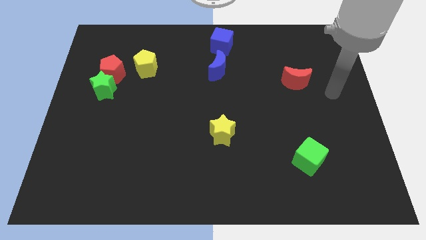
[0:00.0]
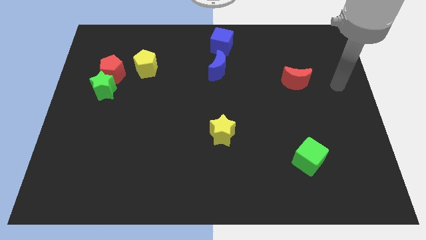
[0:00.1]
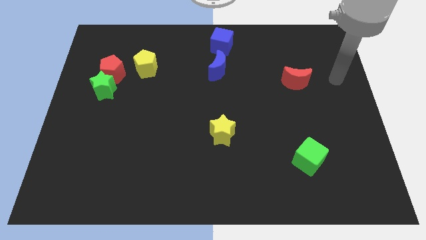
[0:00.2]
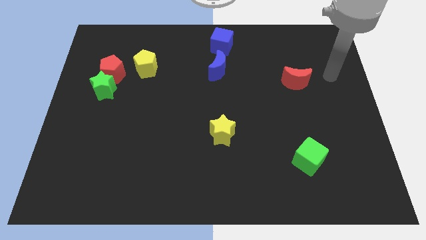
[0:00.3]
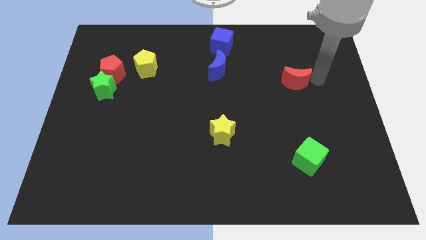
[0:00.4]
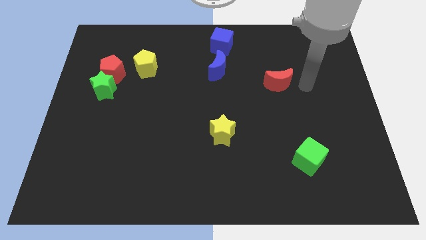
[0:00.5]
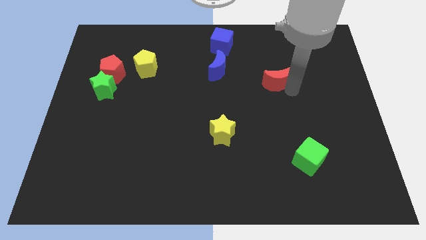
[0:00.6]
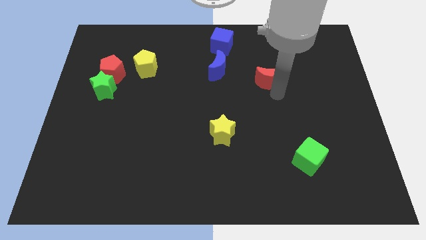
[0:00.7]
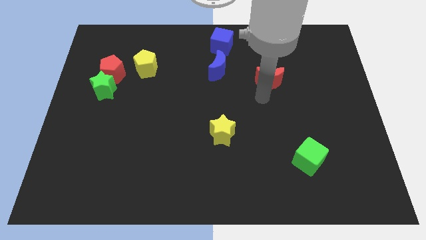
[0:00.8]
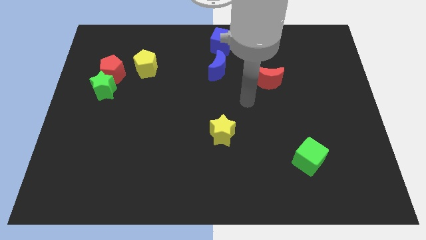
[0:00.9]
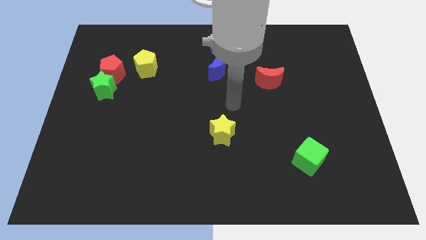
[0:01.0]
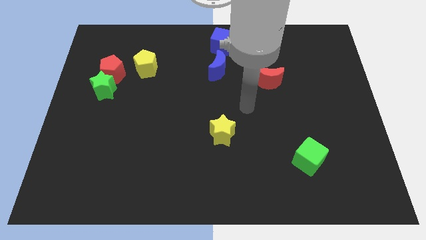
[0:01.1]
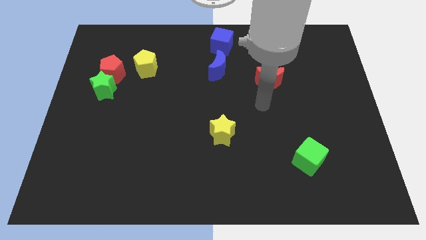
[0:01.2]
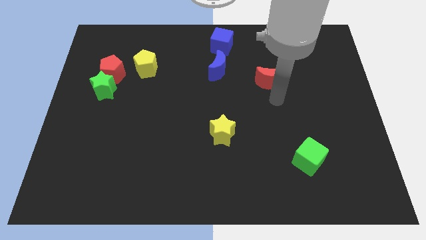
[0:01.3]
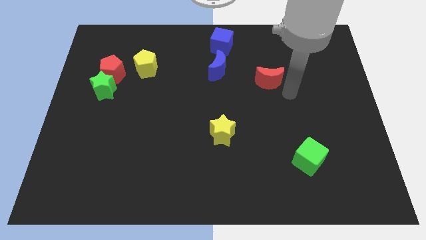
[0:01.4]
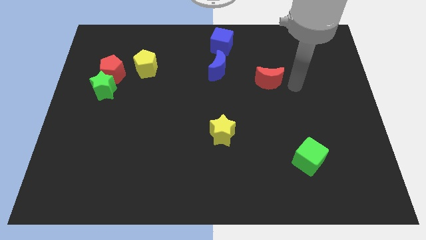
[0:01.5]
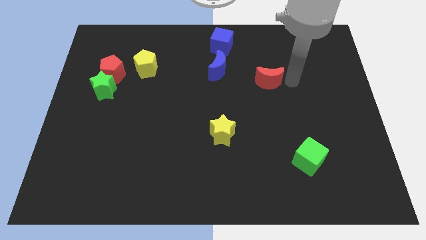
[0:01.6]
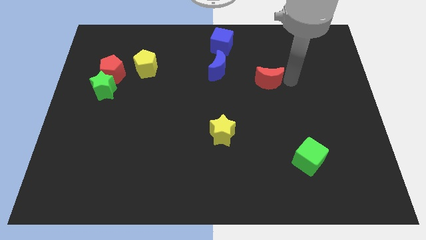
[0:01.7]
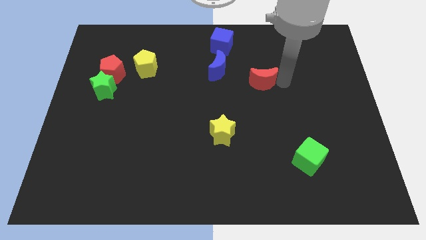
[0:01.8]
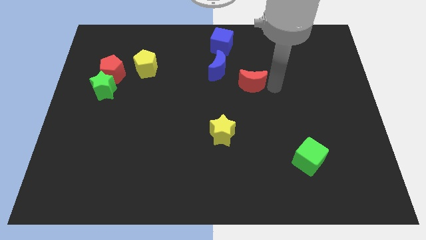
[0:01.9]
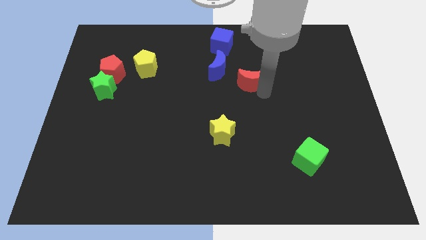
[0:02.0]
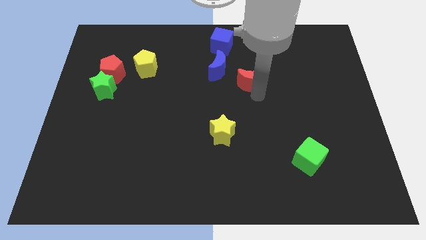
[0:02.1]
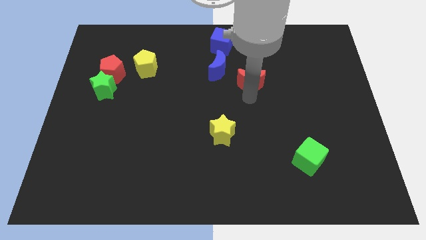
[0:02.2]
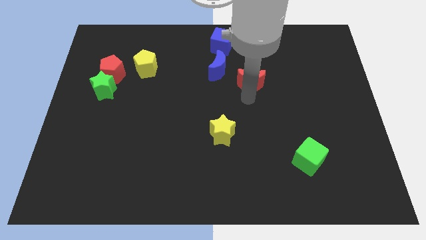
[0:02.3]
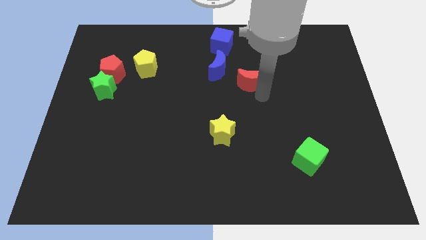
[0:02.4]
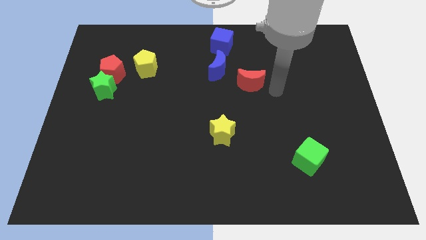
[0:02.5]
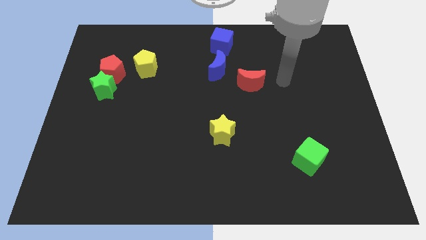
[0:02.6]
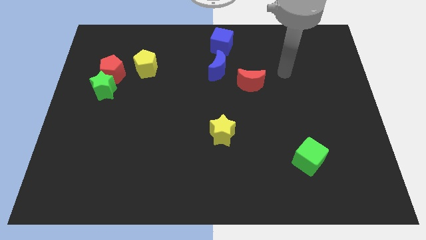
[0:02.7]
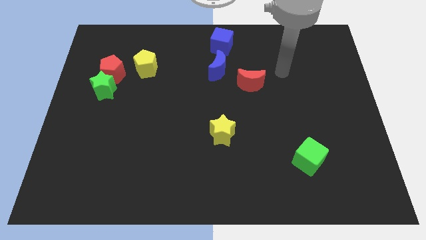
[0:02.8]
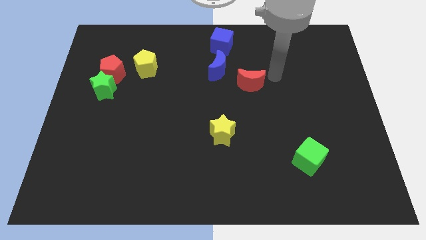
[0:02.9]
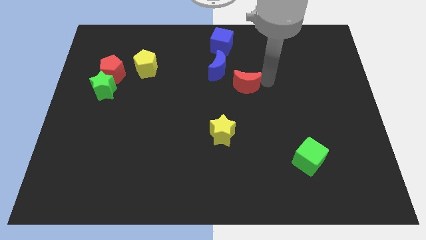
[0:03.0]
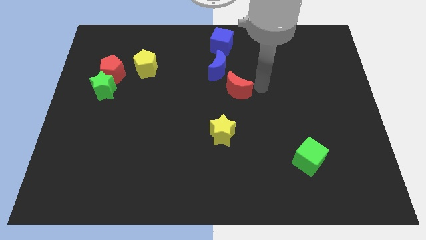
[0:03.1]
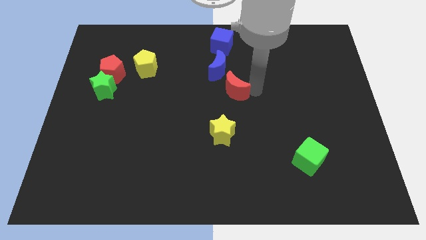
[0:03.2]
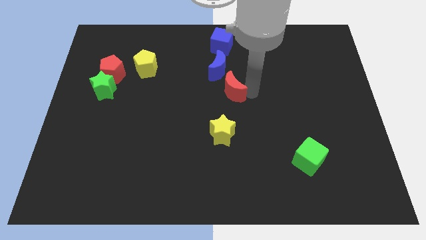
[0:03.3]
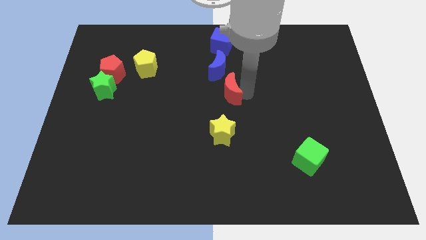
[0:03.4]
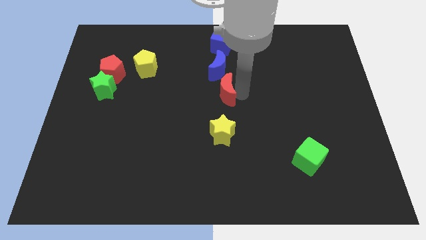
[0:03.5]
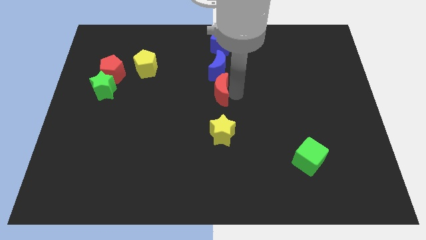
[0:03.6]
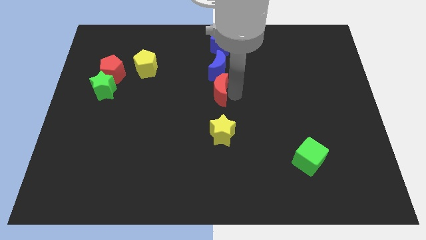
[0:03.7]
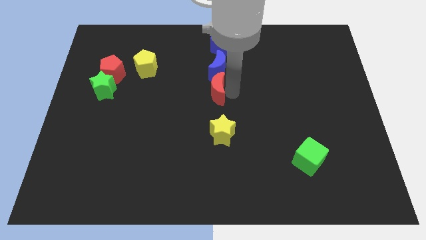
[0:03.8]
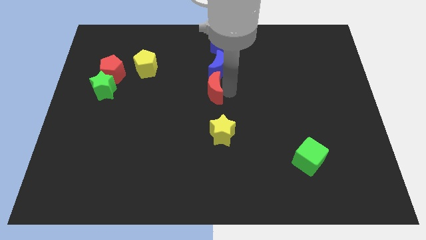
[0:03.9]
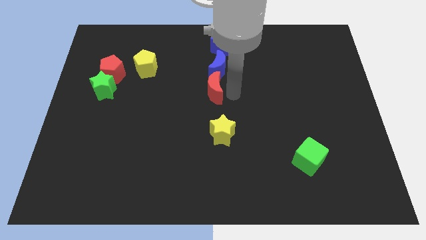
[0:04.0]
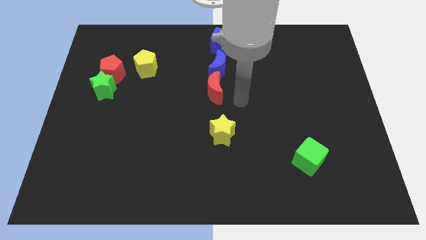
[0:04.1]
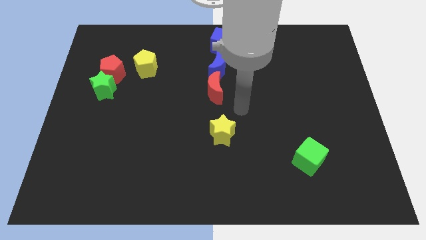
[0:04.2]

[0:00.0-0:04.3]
place the red crescent below the blue moon

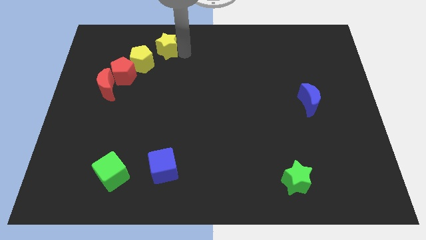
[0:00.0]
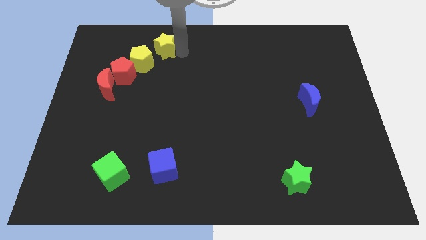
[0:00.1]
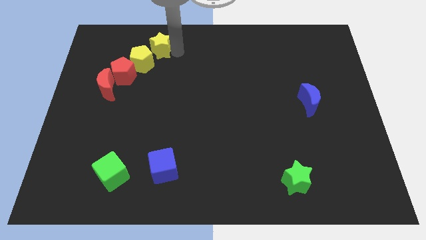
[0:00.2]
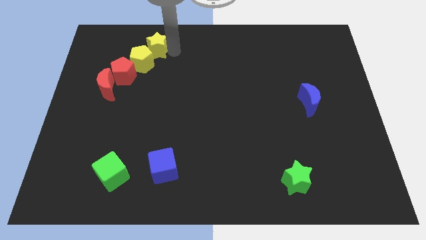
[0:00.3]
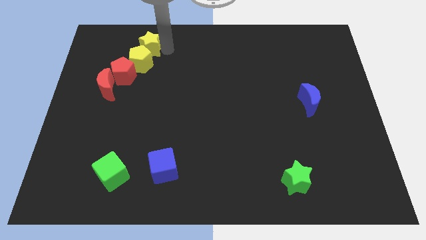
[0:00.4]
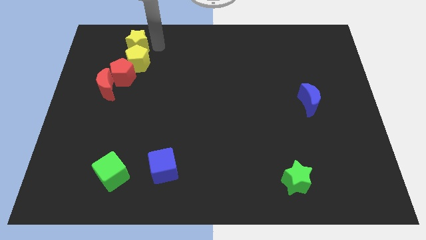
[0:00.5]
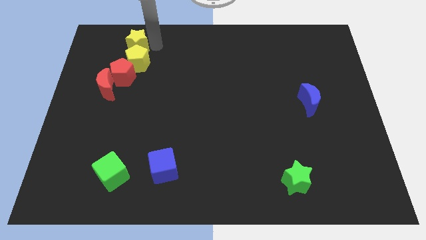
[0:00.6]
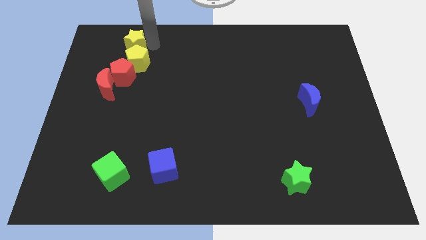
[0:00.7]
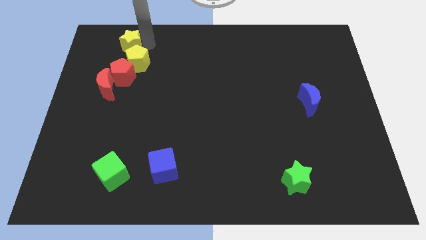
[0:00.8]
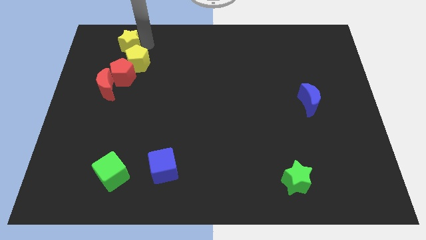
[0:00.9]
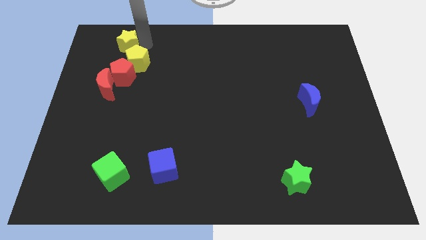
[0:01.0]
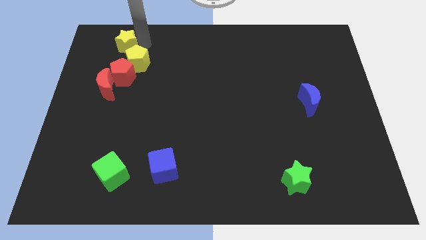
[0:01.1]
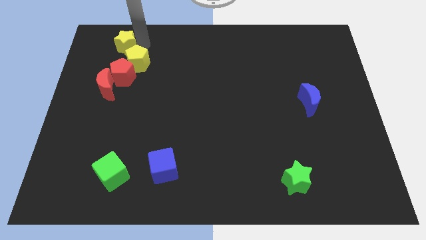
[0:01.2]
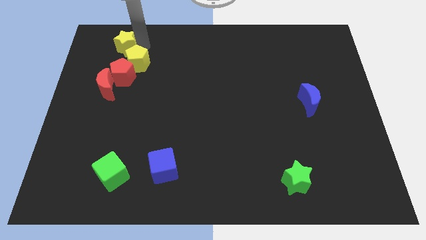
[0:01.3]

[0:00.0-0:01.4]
place the yellow star above the yellow pentagon

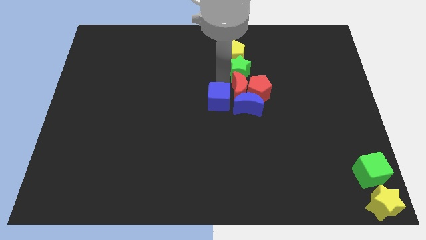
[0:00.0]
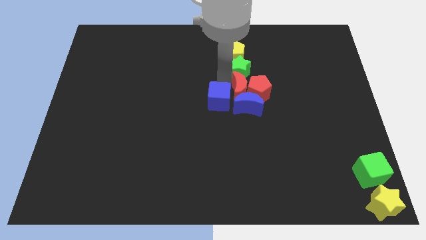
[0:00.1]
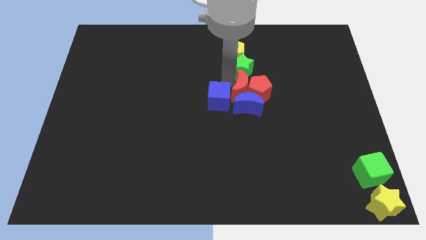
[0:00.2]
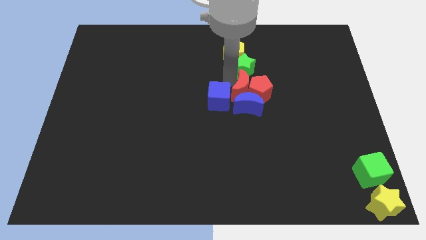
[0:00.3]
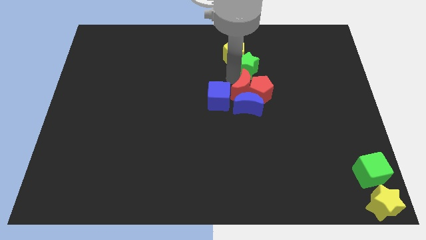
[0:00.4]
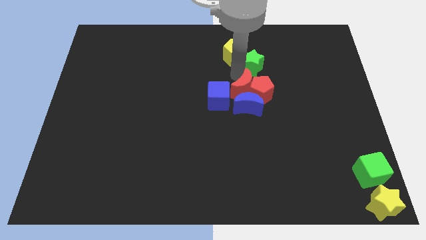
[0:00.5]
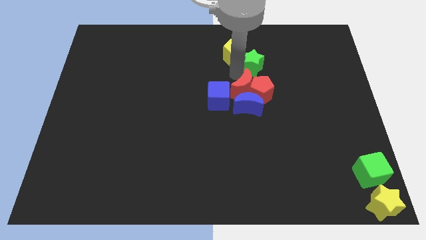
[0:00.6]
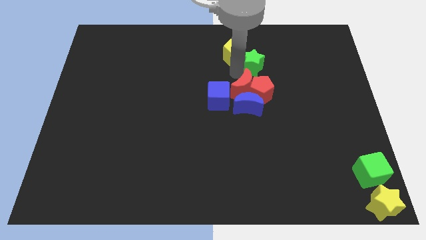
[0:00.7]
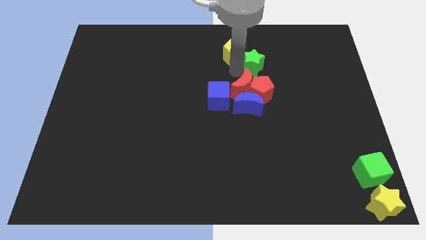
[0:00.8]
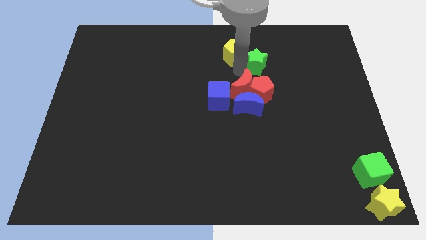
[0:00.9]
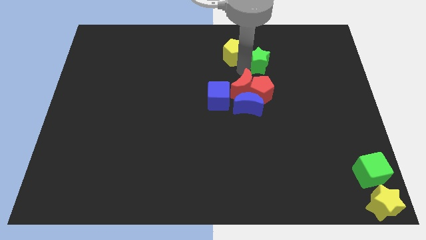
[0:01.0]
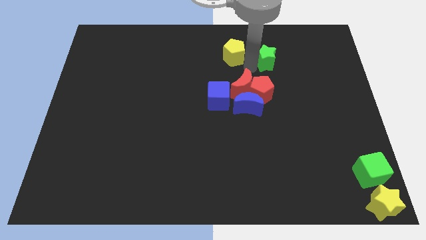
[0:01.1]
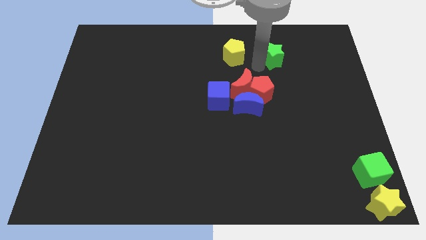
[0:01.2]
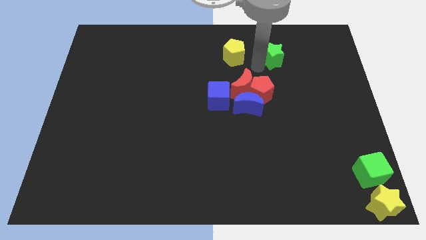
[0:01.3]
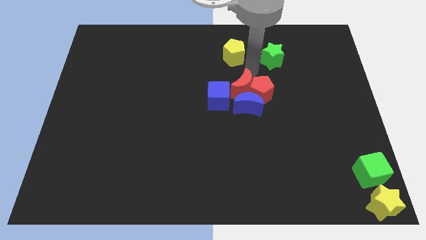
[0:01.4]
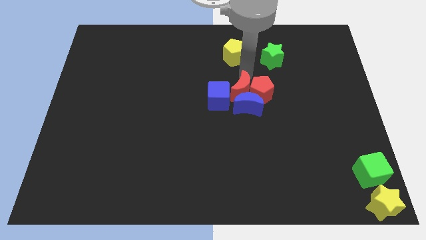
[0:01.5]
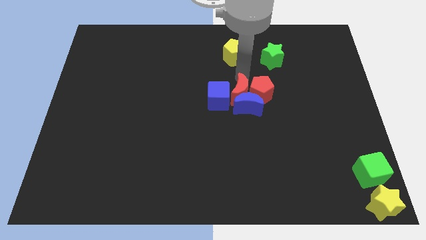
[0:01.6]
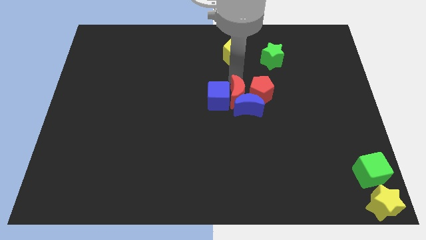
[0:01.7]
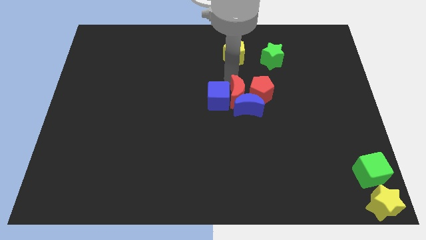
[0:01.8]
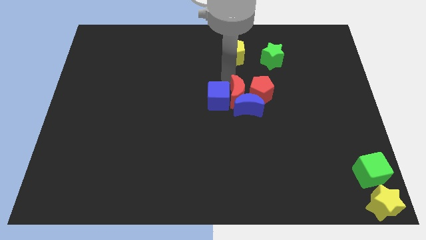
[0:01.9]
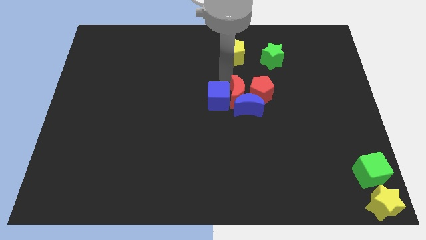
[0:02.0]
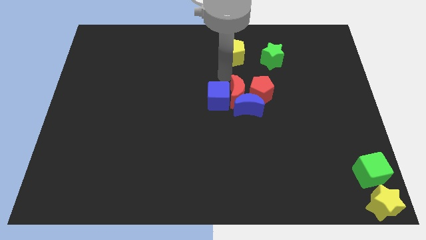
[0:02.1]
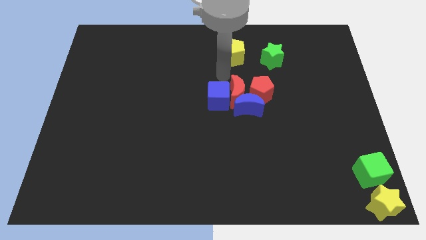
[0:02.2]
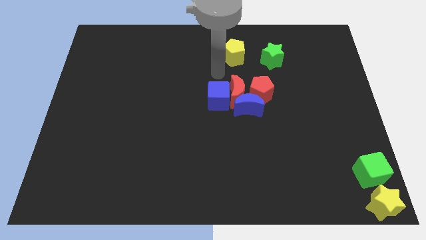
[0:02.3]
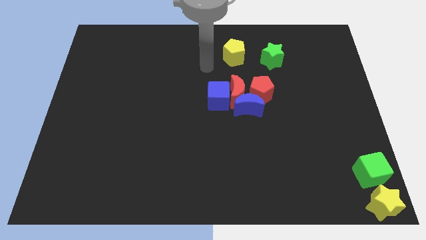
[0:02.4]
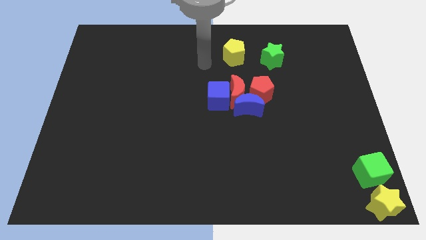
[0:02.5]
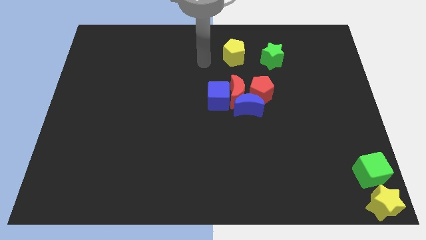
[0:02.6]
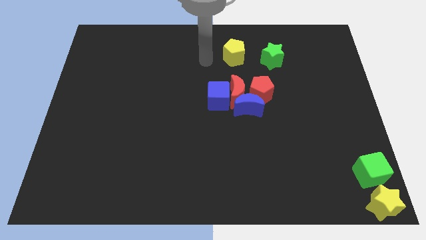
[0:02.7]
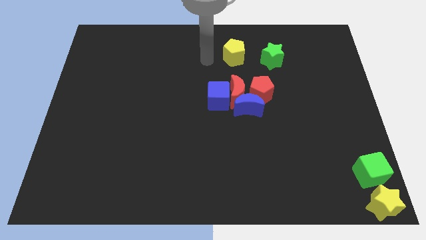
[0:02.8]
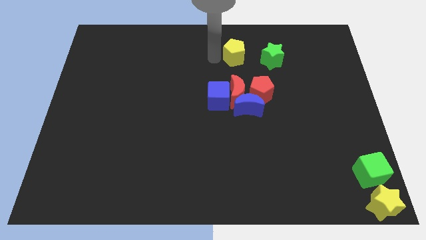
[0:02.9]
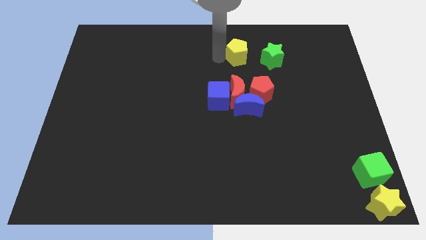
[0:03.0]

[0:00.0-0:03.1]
separate the red crescent and green star
